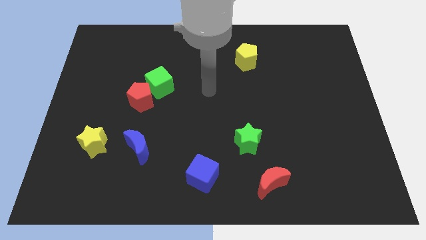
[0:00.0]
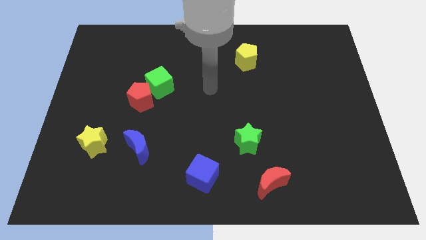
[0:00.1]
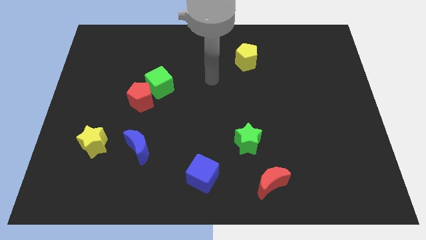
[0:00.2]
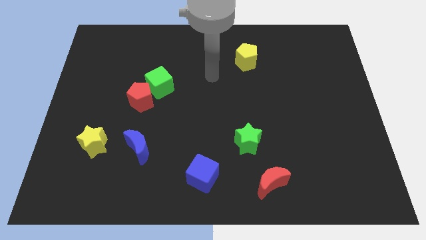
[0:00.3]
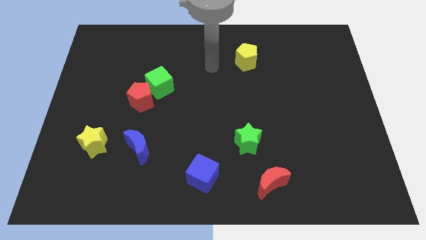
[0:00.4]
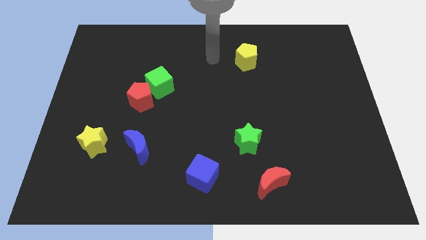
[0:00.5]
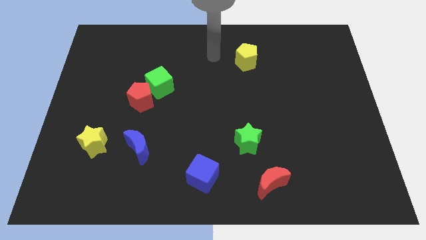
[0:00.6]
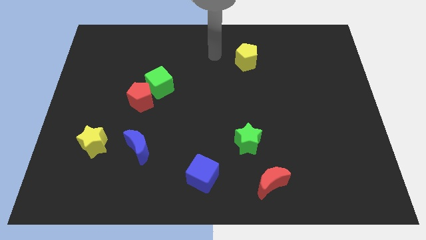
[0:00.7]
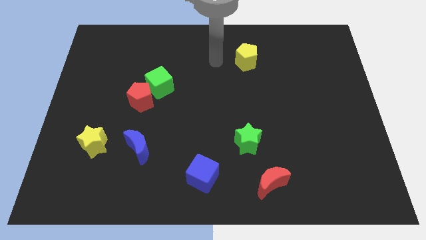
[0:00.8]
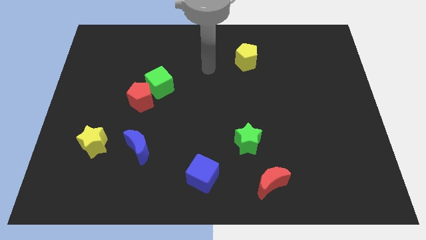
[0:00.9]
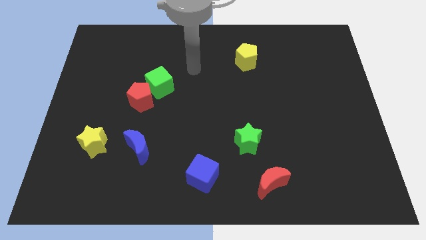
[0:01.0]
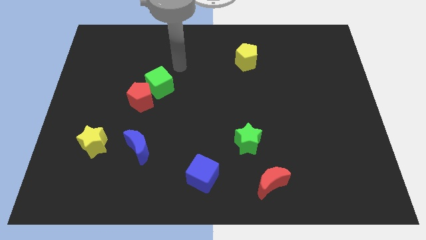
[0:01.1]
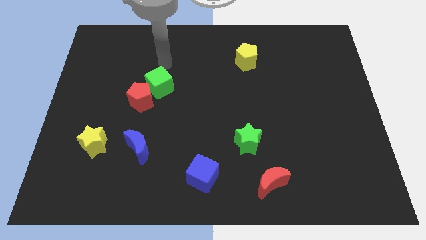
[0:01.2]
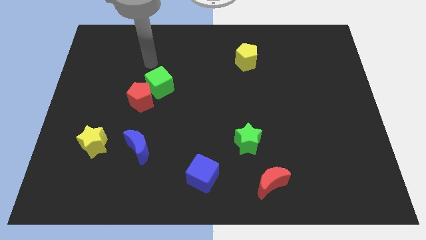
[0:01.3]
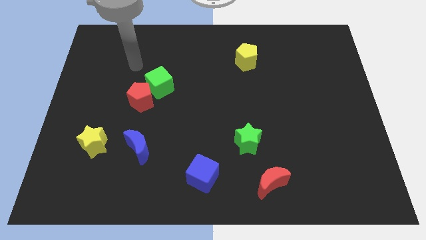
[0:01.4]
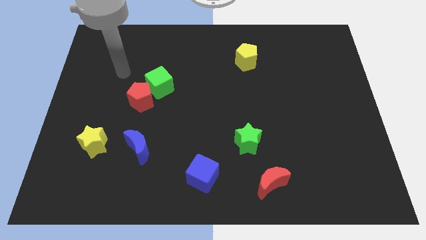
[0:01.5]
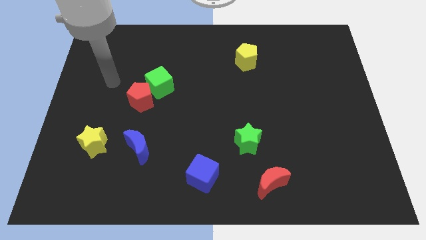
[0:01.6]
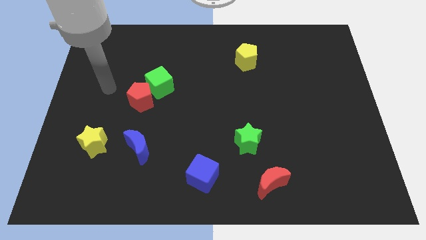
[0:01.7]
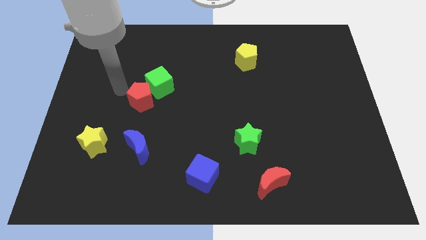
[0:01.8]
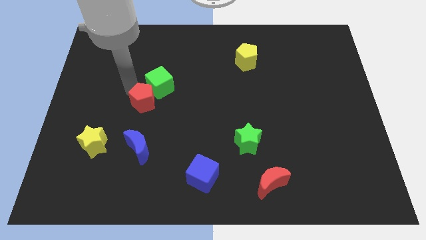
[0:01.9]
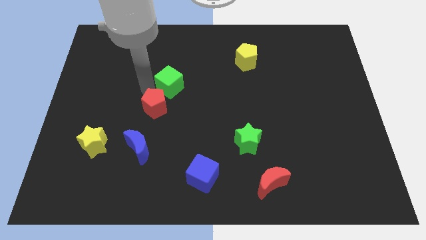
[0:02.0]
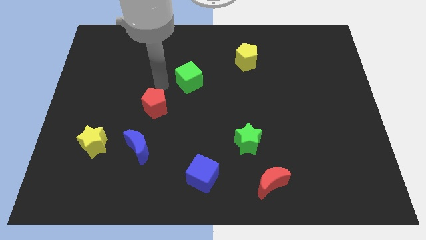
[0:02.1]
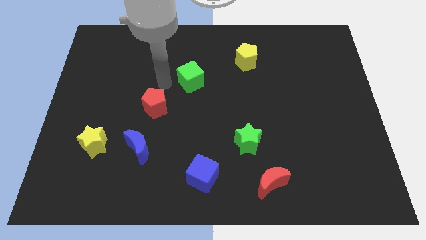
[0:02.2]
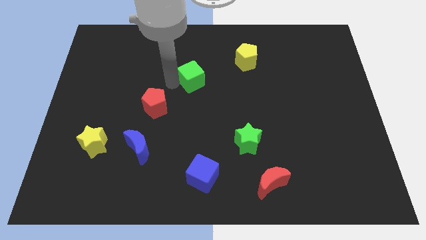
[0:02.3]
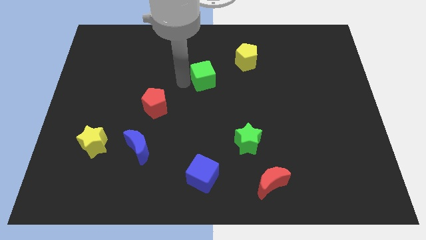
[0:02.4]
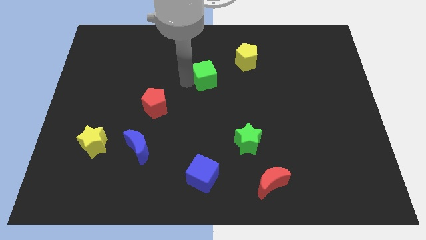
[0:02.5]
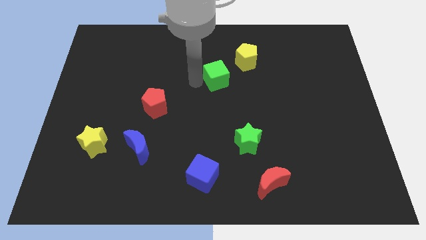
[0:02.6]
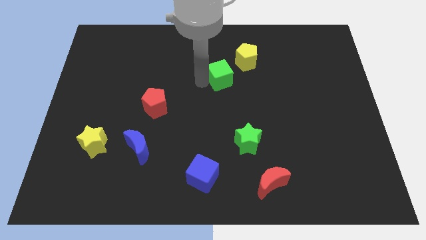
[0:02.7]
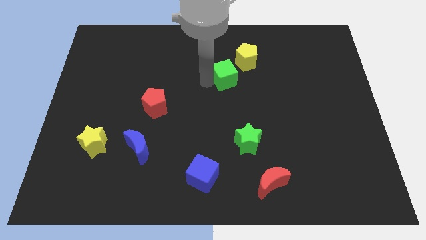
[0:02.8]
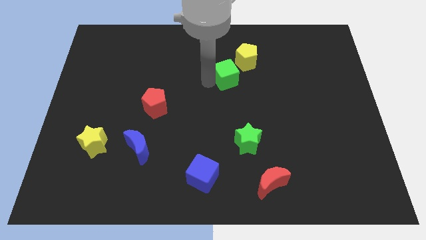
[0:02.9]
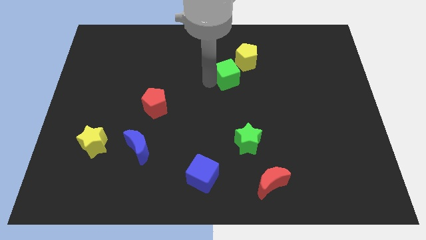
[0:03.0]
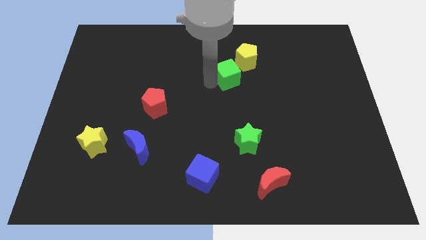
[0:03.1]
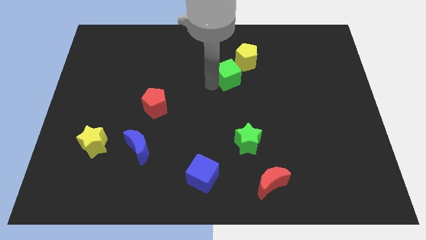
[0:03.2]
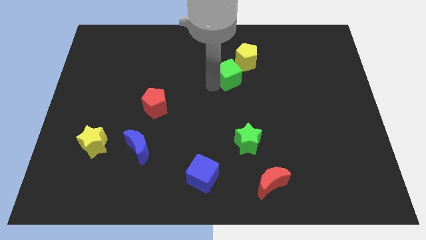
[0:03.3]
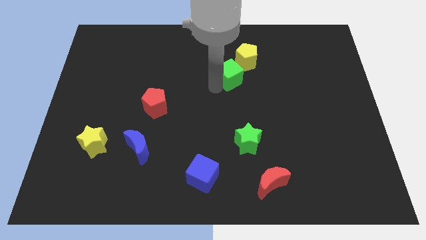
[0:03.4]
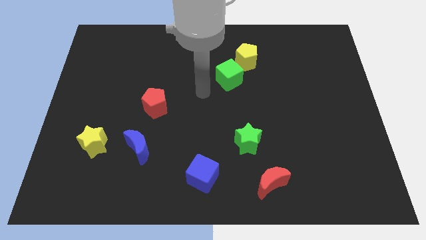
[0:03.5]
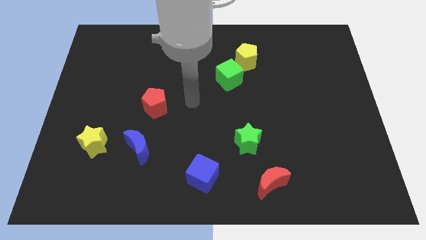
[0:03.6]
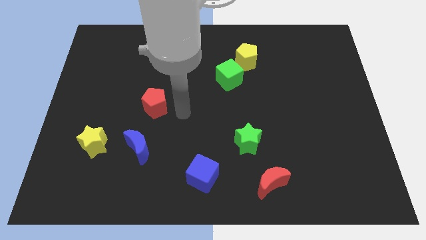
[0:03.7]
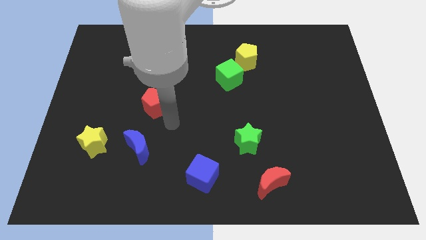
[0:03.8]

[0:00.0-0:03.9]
move the green cube towards the bottom of yellow pentagon

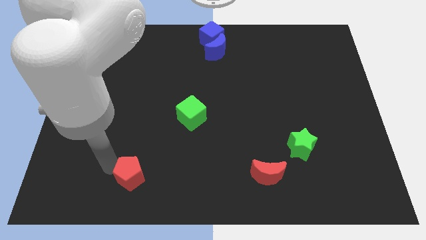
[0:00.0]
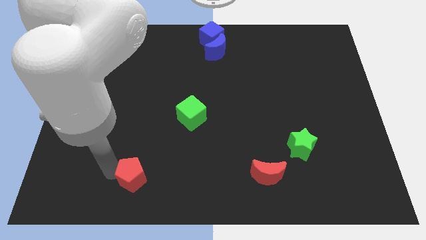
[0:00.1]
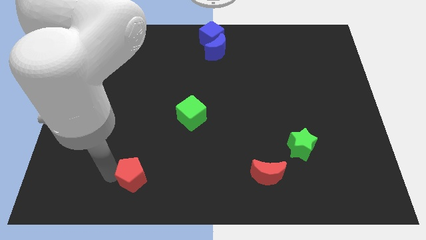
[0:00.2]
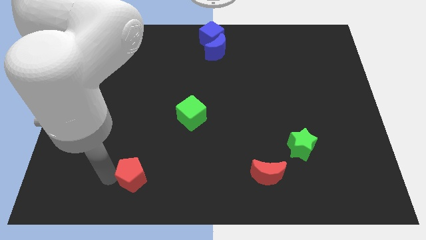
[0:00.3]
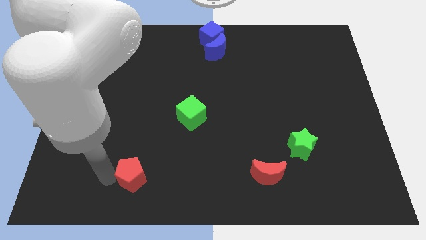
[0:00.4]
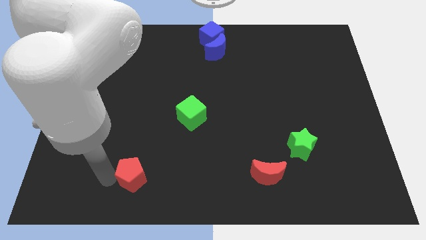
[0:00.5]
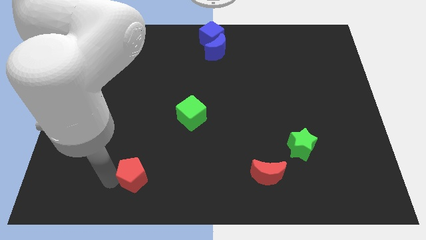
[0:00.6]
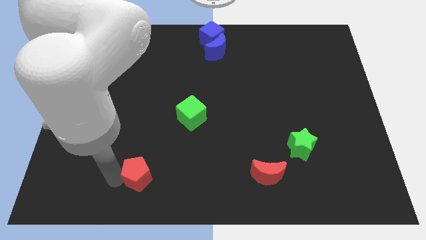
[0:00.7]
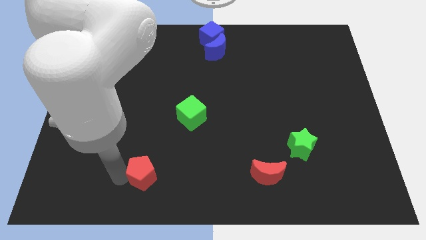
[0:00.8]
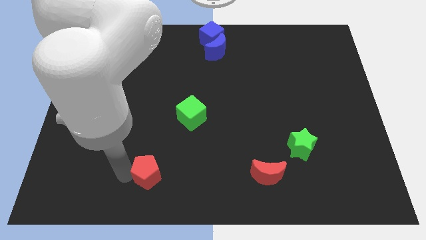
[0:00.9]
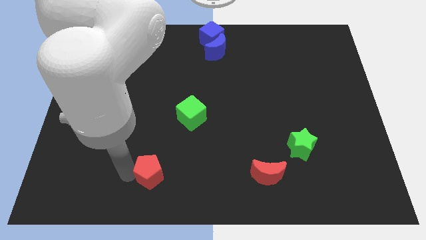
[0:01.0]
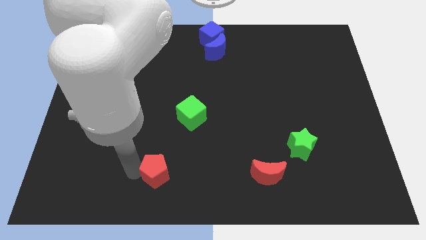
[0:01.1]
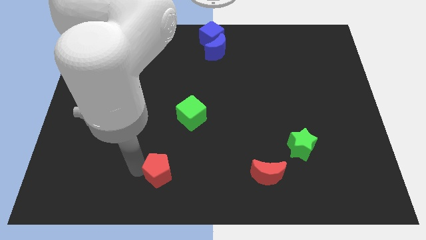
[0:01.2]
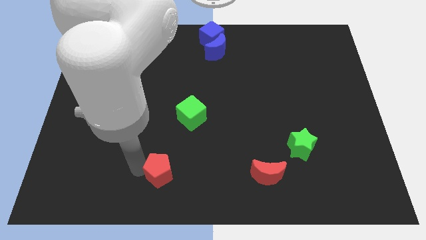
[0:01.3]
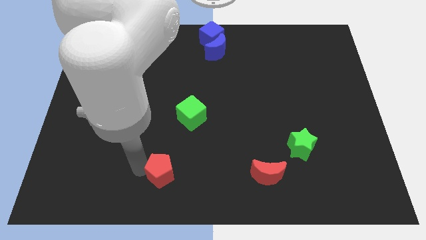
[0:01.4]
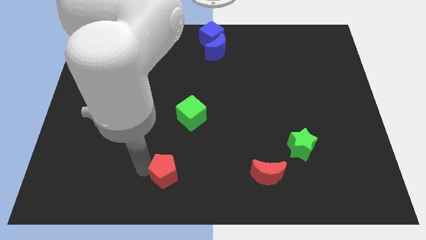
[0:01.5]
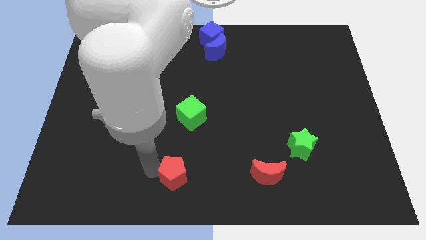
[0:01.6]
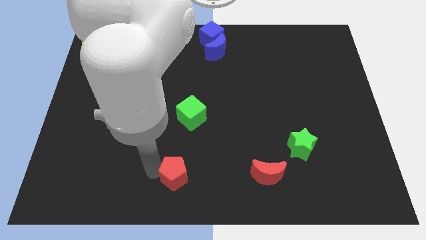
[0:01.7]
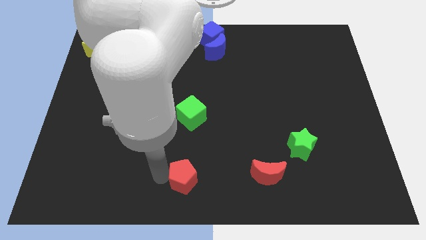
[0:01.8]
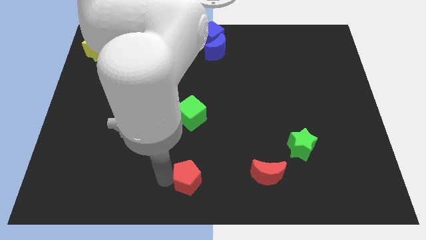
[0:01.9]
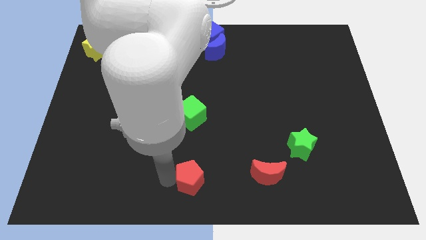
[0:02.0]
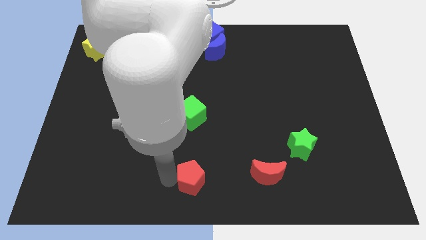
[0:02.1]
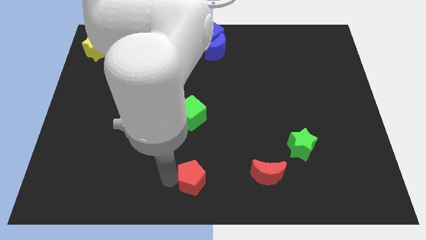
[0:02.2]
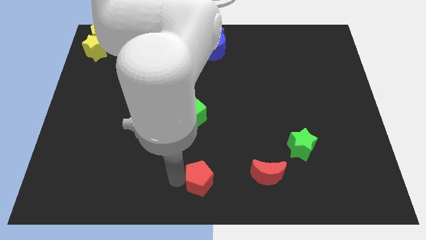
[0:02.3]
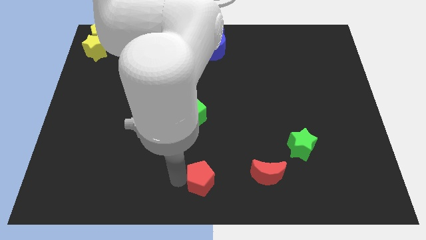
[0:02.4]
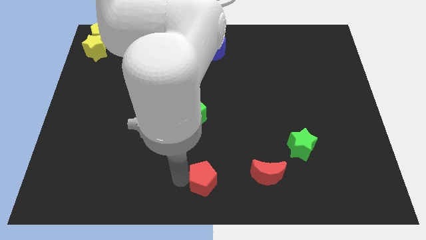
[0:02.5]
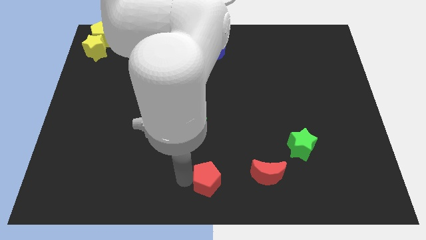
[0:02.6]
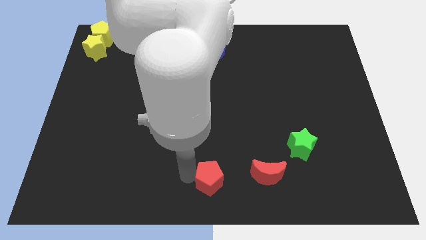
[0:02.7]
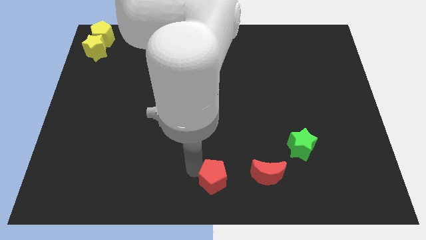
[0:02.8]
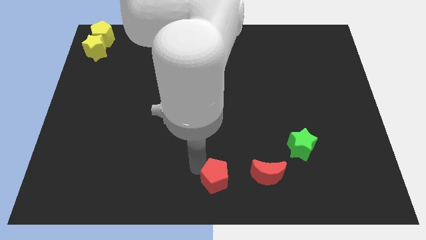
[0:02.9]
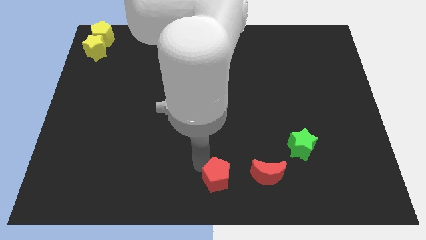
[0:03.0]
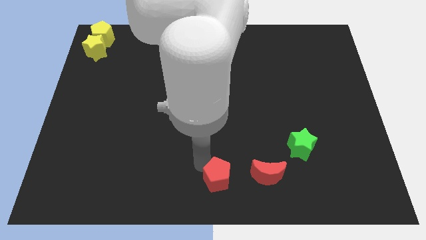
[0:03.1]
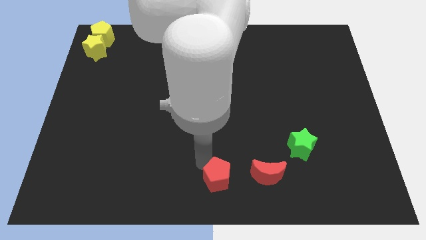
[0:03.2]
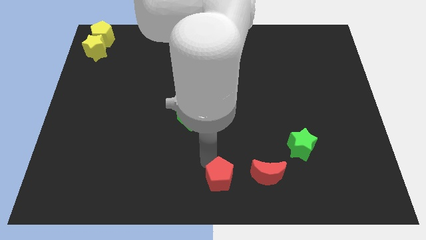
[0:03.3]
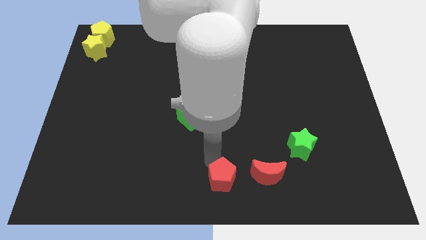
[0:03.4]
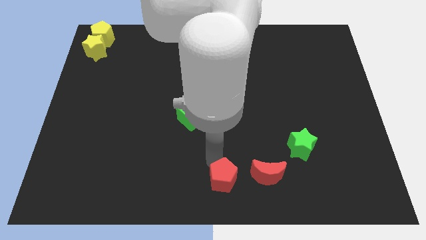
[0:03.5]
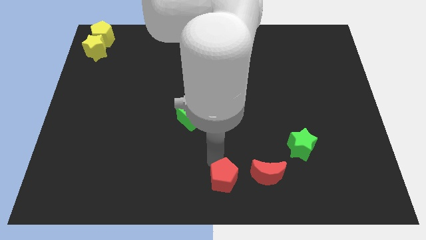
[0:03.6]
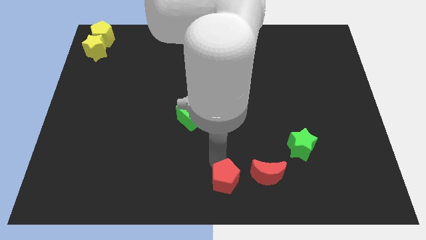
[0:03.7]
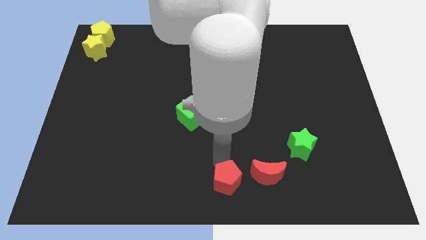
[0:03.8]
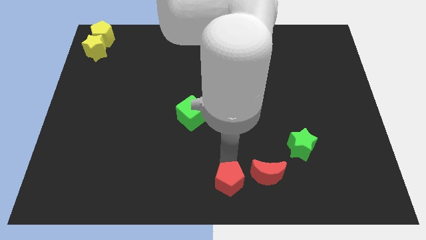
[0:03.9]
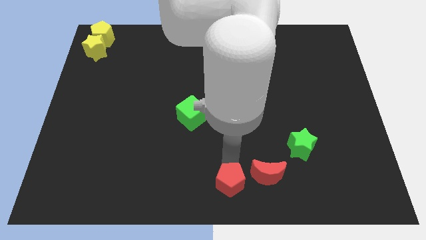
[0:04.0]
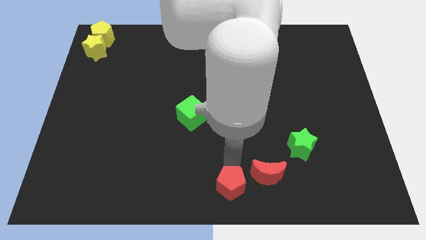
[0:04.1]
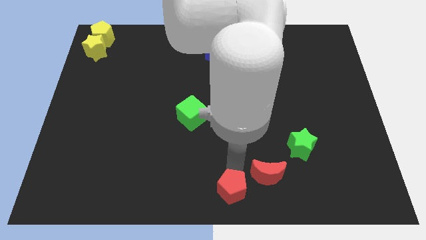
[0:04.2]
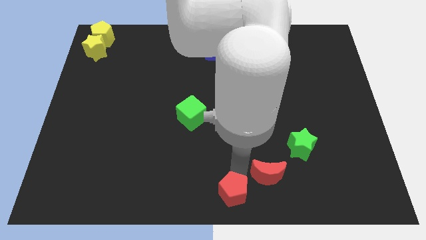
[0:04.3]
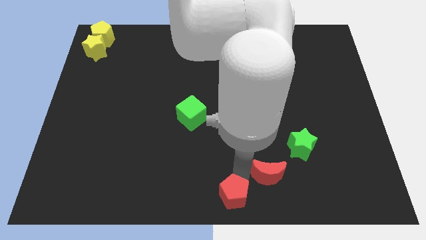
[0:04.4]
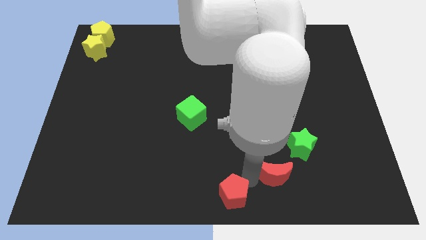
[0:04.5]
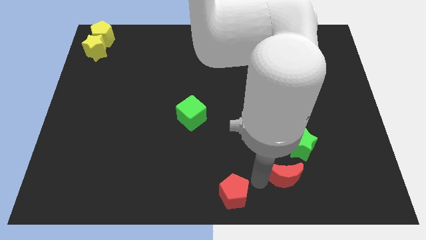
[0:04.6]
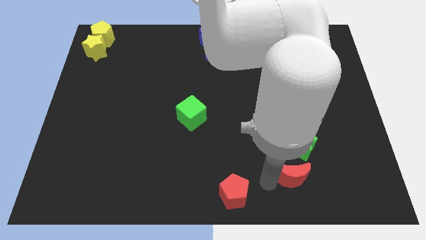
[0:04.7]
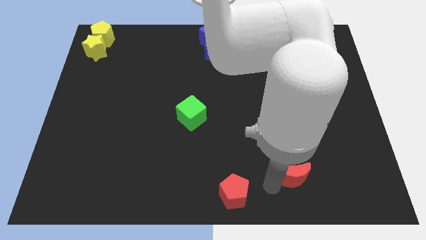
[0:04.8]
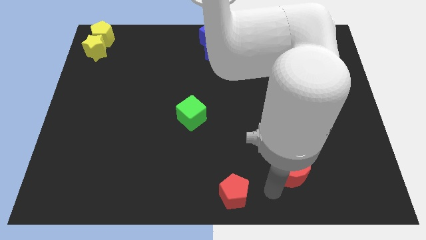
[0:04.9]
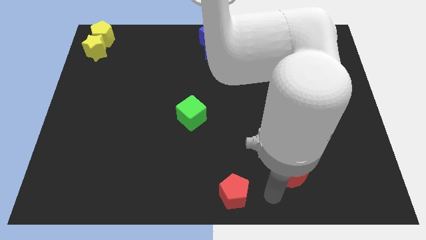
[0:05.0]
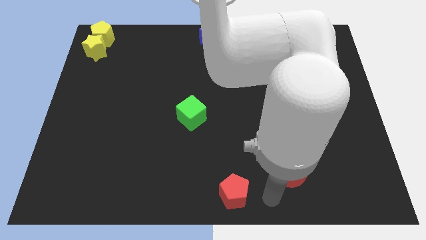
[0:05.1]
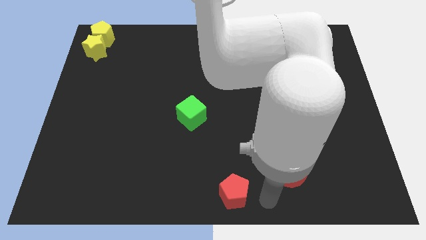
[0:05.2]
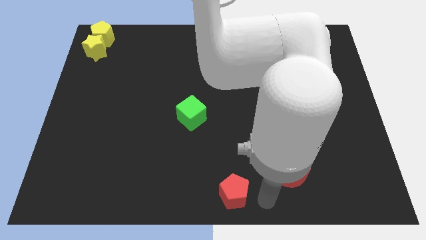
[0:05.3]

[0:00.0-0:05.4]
move the red pentagon towards the bottom center if the board
